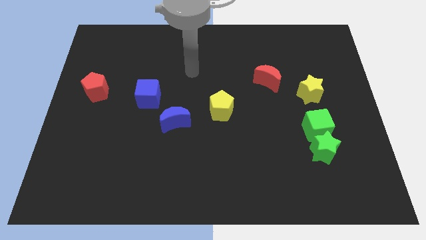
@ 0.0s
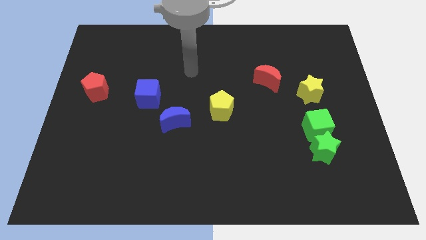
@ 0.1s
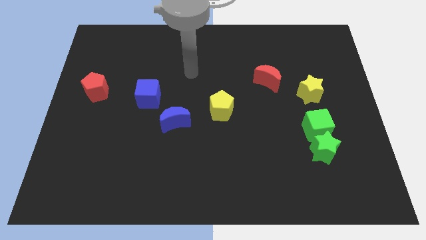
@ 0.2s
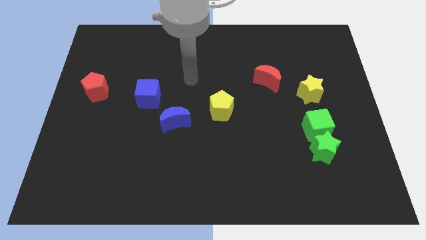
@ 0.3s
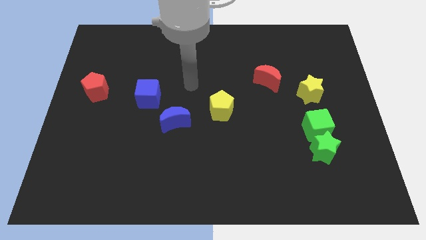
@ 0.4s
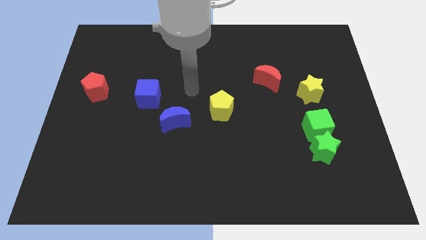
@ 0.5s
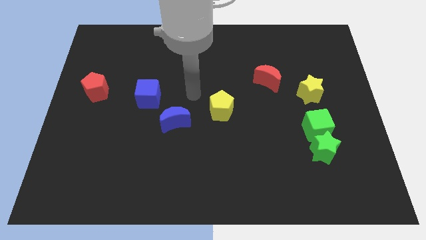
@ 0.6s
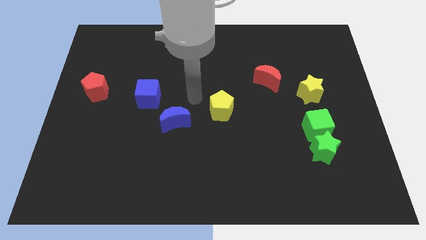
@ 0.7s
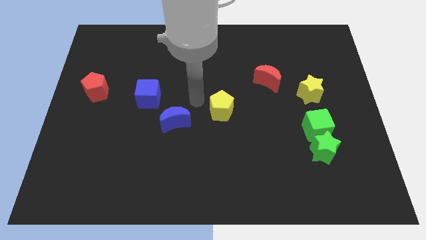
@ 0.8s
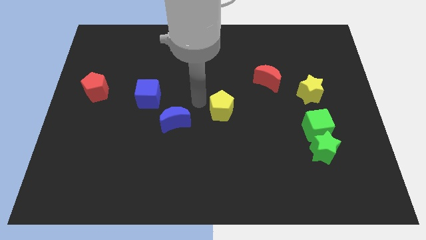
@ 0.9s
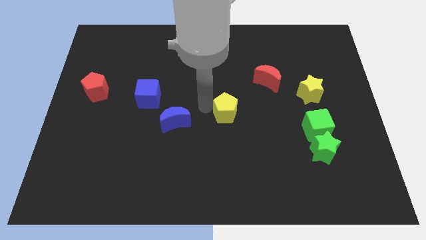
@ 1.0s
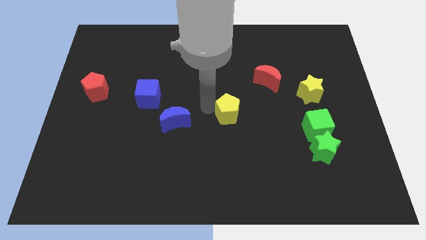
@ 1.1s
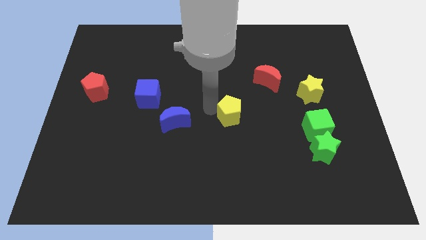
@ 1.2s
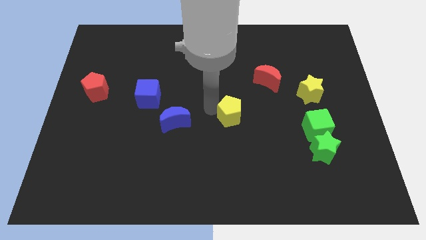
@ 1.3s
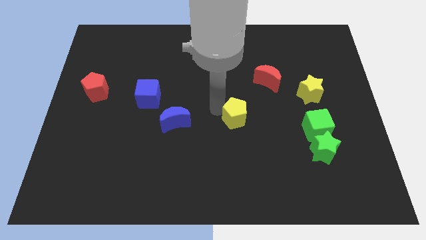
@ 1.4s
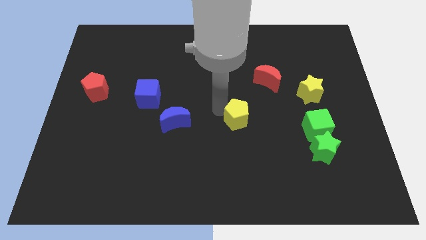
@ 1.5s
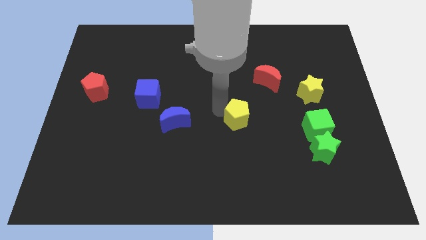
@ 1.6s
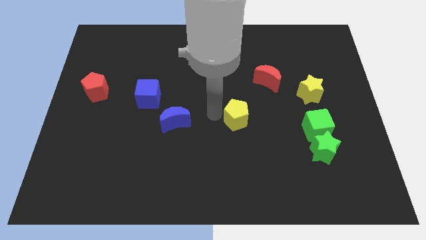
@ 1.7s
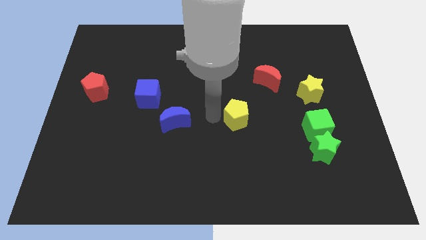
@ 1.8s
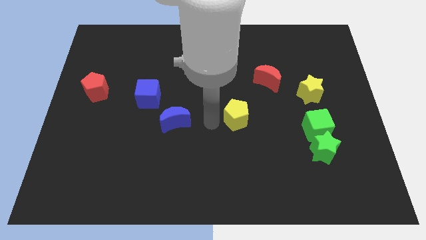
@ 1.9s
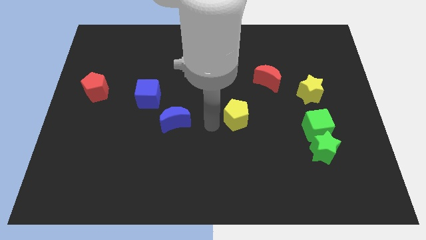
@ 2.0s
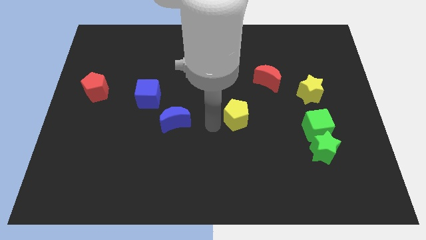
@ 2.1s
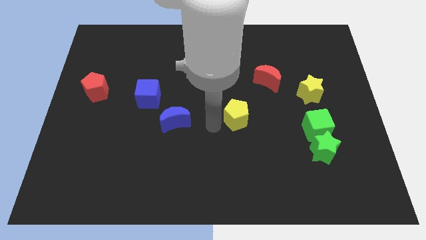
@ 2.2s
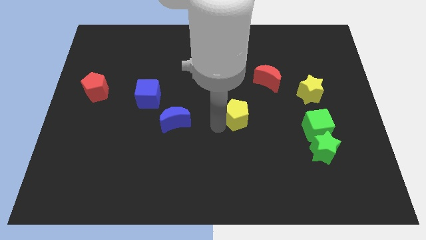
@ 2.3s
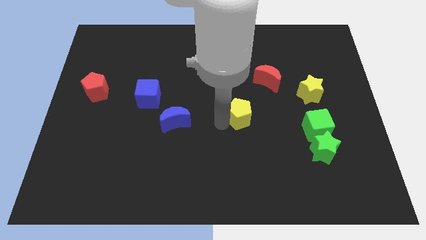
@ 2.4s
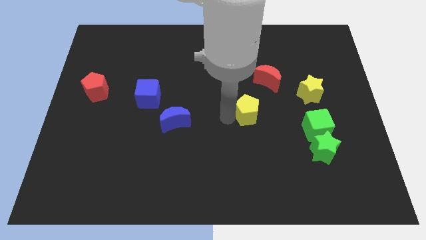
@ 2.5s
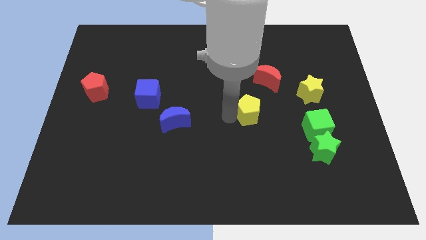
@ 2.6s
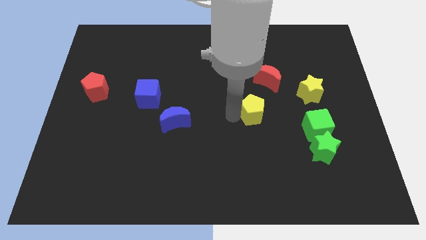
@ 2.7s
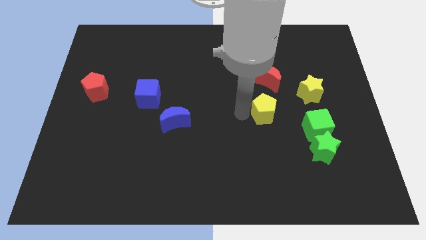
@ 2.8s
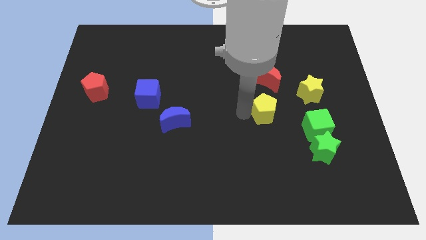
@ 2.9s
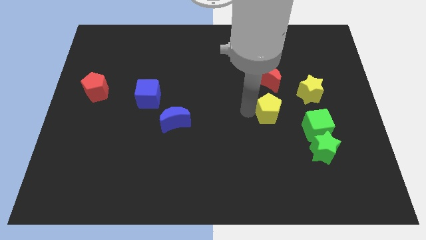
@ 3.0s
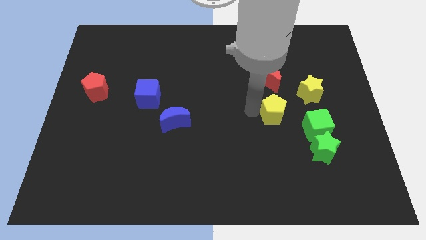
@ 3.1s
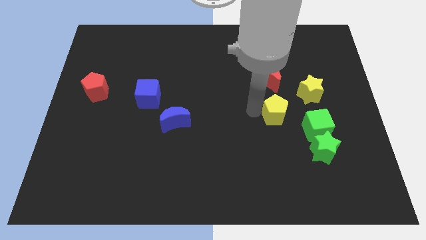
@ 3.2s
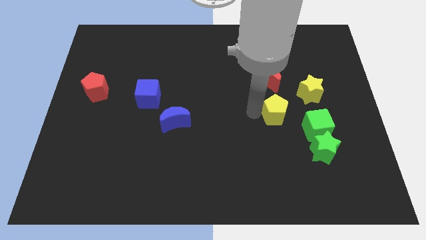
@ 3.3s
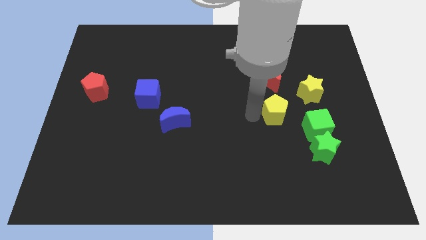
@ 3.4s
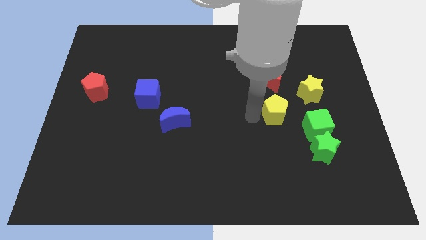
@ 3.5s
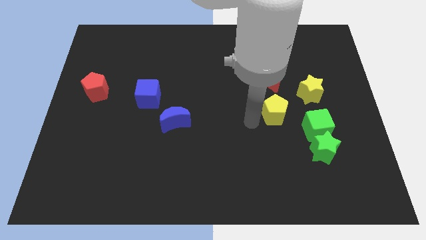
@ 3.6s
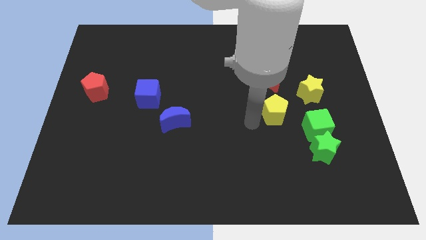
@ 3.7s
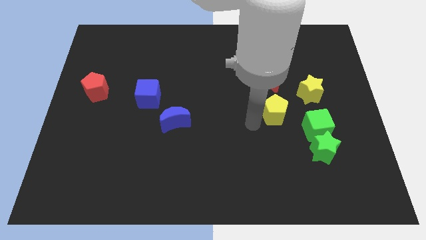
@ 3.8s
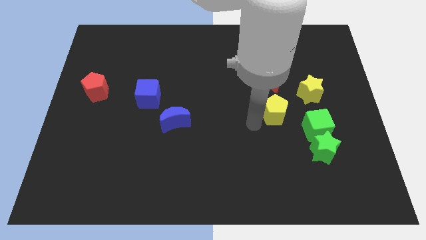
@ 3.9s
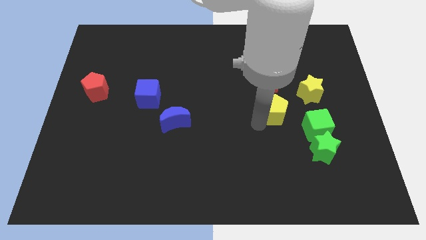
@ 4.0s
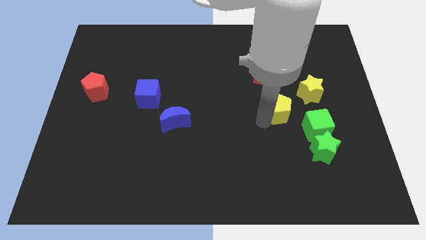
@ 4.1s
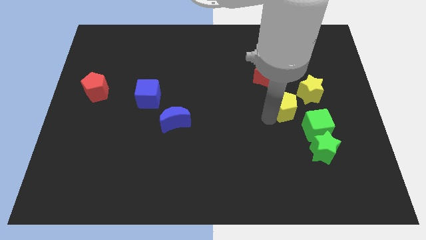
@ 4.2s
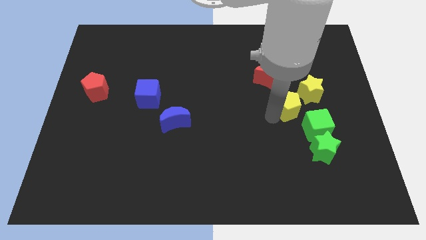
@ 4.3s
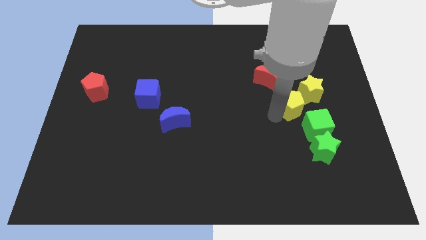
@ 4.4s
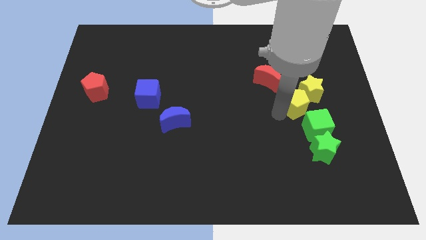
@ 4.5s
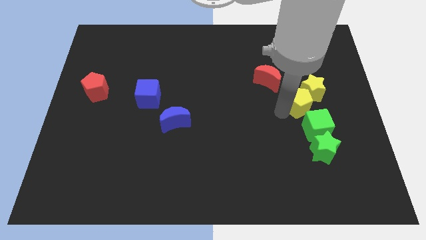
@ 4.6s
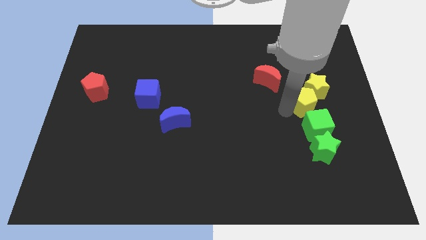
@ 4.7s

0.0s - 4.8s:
push the yellow pentagon close to the yellow star

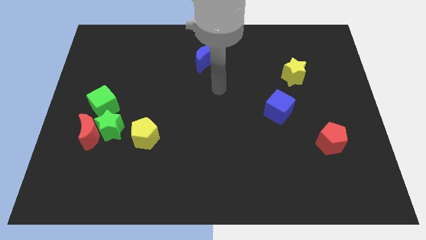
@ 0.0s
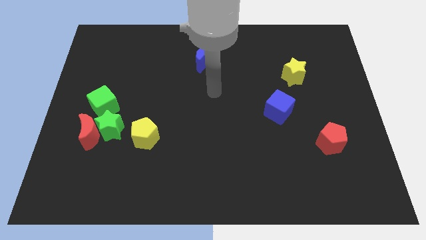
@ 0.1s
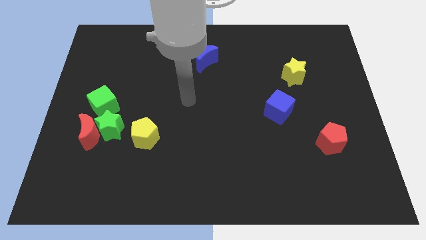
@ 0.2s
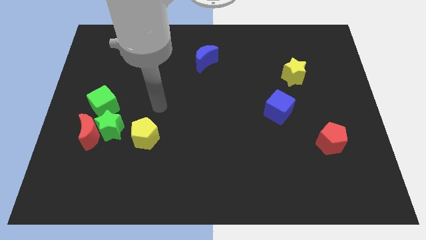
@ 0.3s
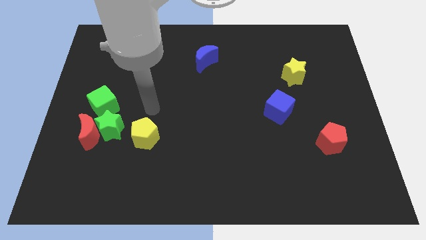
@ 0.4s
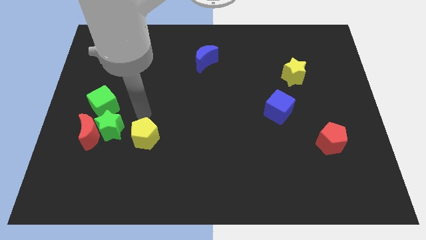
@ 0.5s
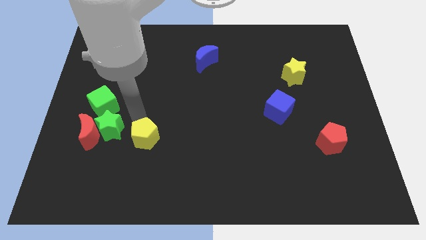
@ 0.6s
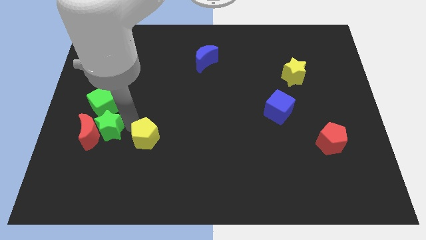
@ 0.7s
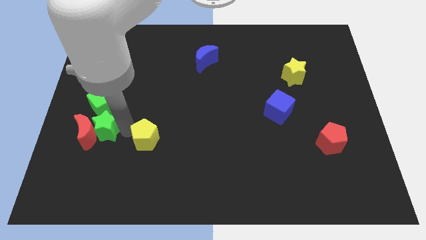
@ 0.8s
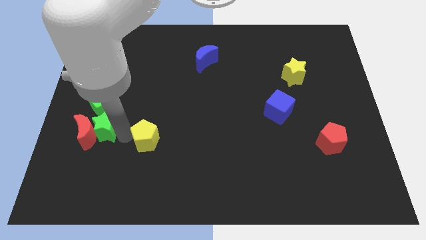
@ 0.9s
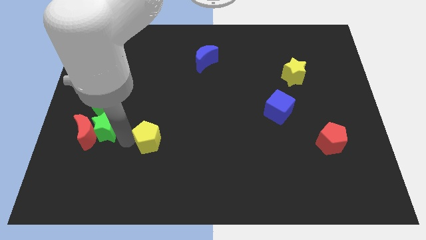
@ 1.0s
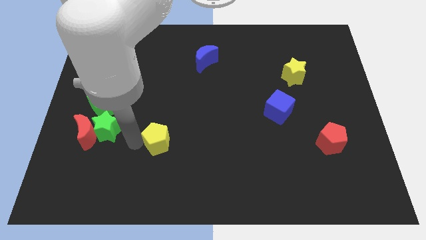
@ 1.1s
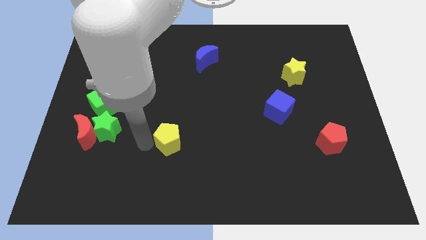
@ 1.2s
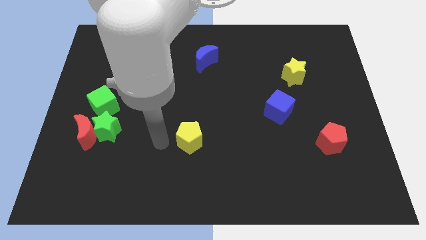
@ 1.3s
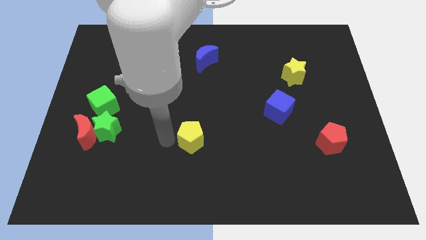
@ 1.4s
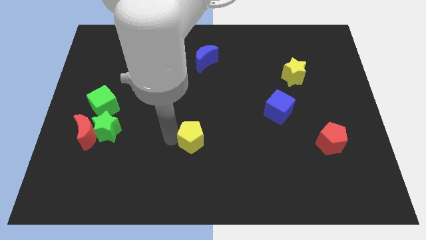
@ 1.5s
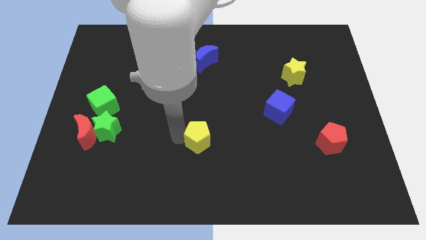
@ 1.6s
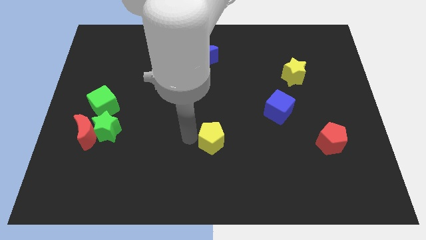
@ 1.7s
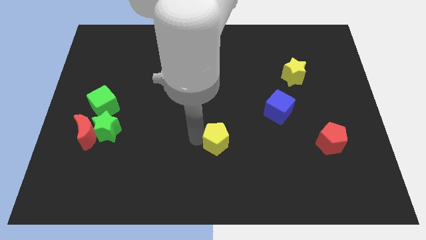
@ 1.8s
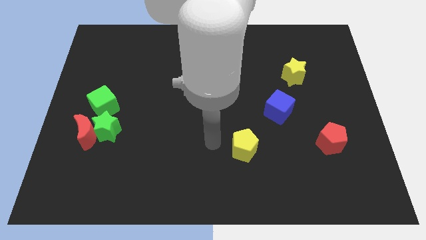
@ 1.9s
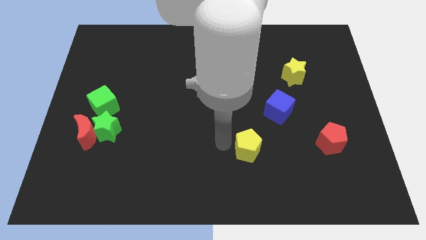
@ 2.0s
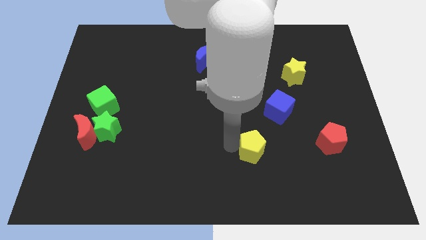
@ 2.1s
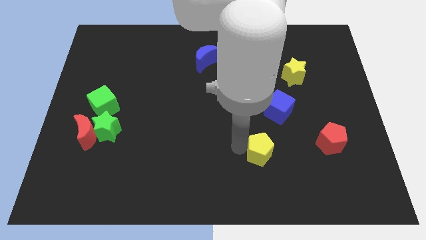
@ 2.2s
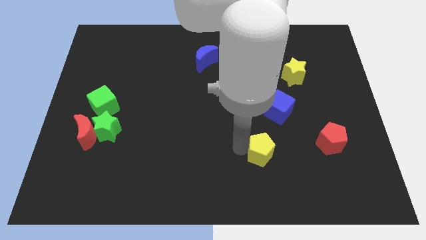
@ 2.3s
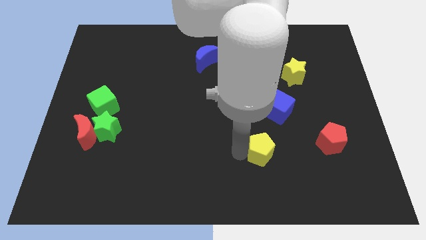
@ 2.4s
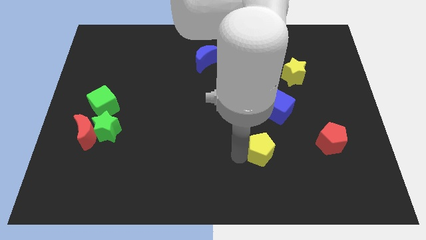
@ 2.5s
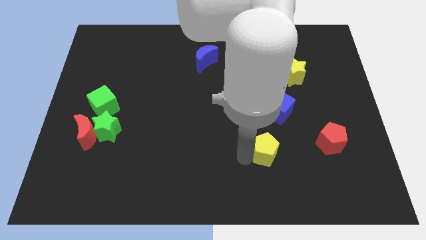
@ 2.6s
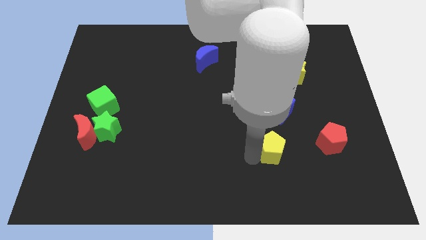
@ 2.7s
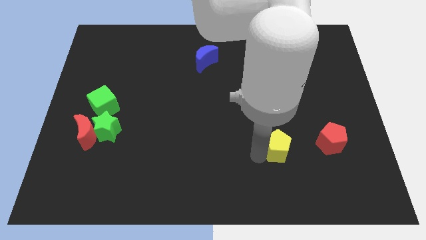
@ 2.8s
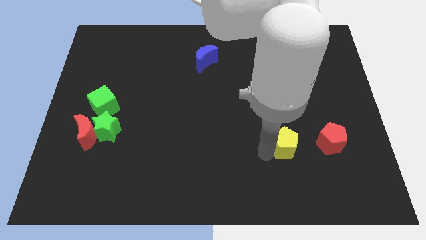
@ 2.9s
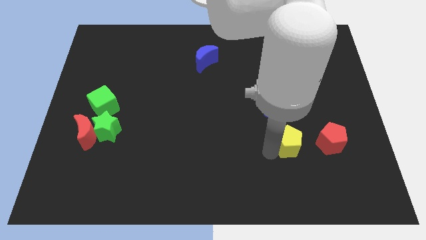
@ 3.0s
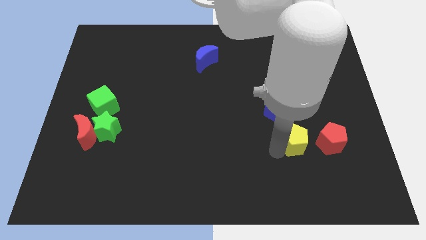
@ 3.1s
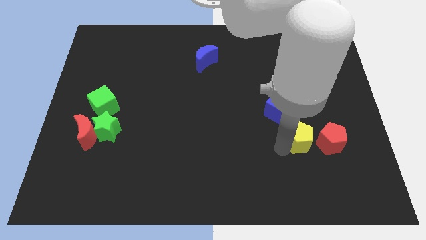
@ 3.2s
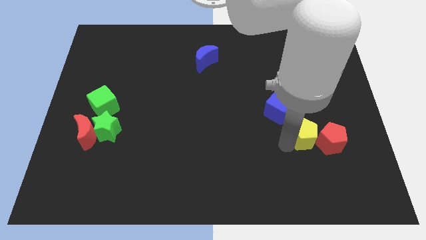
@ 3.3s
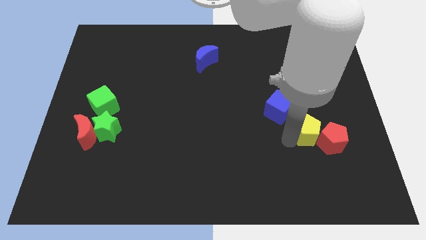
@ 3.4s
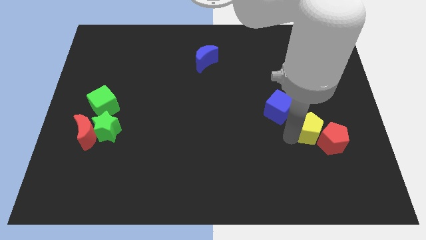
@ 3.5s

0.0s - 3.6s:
slide the yellow pentagon close to the red pentagon
